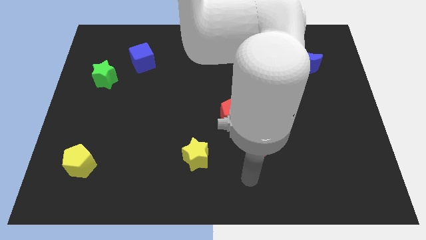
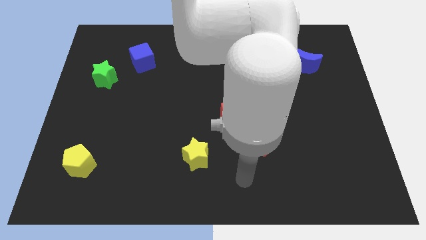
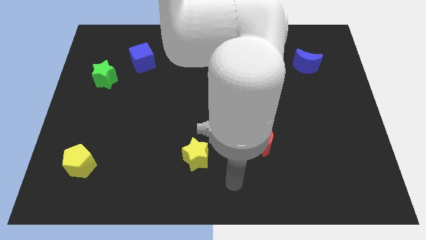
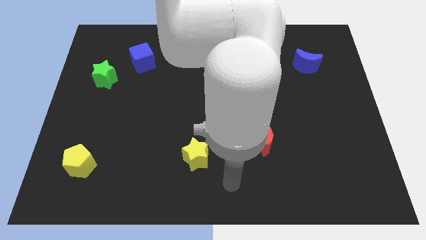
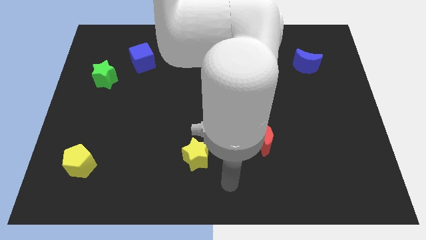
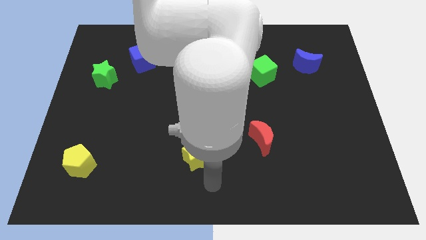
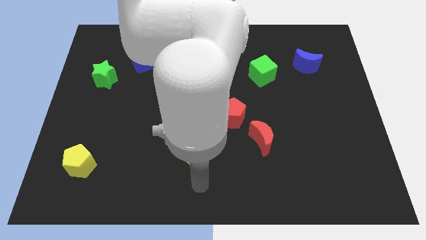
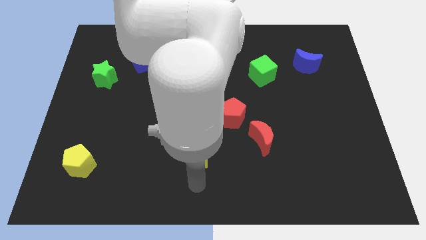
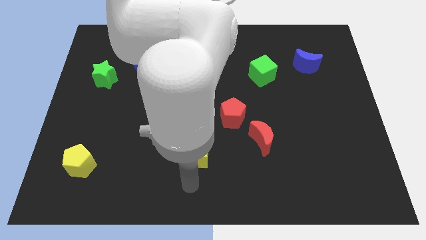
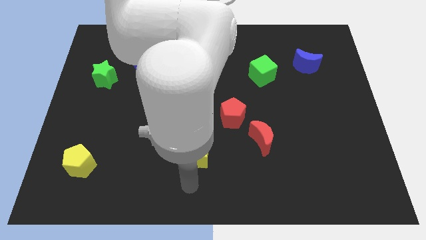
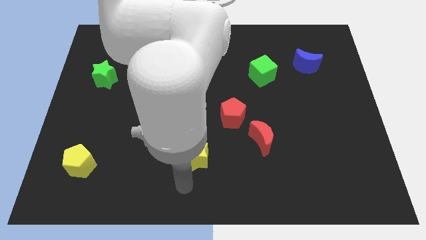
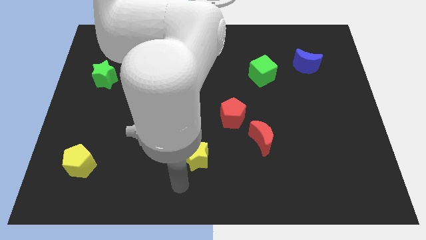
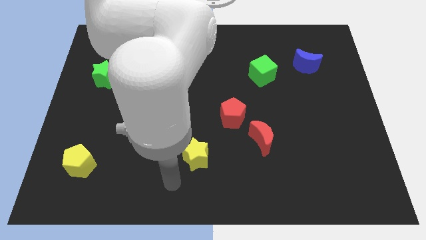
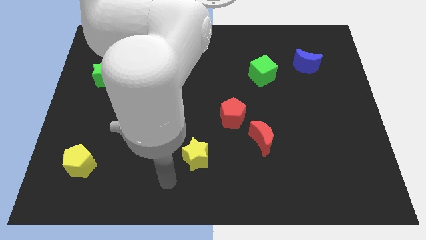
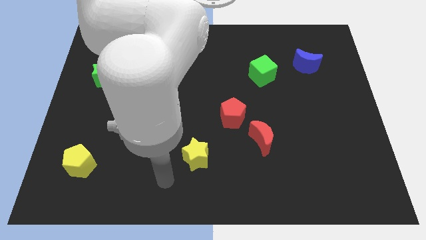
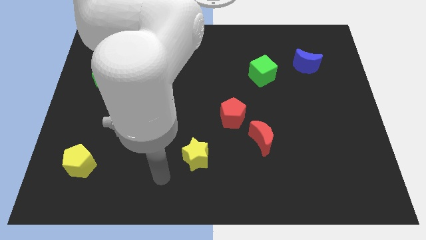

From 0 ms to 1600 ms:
place arm on the bottom left of yellow star

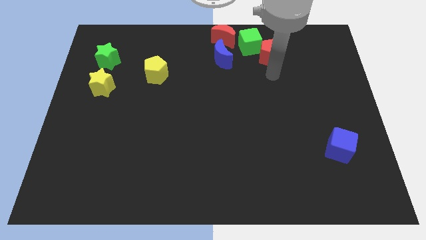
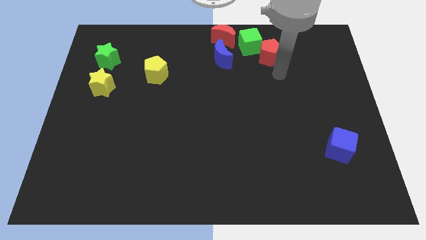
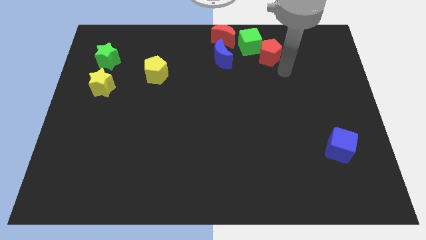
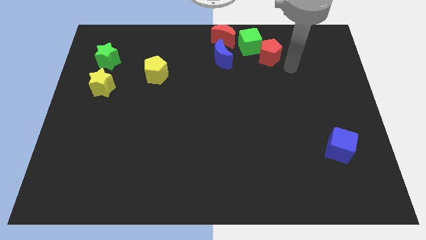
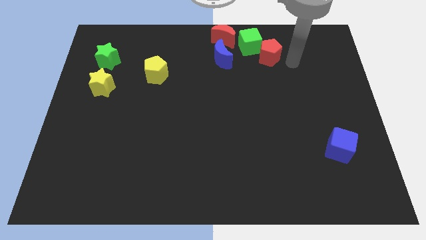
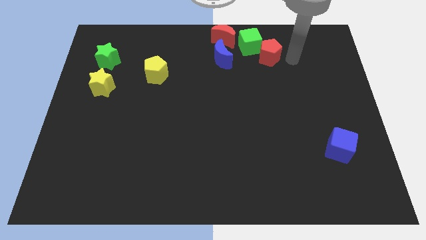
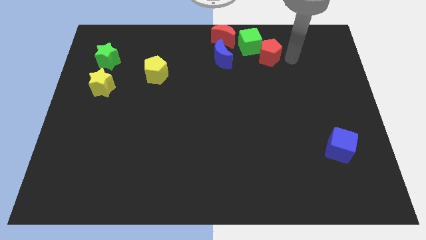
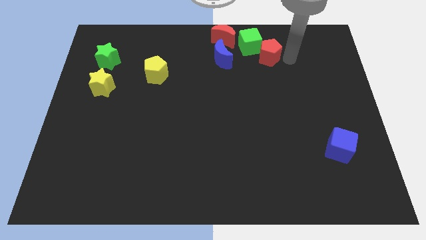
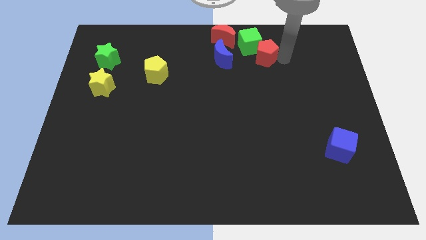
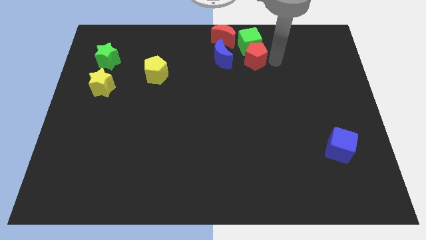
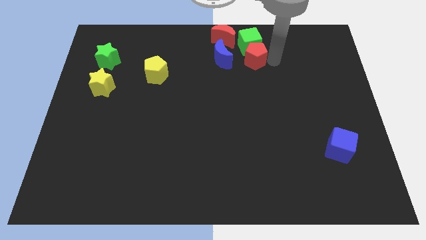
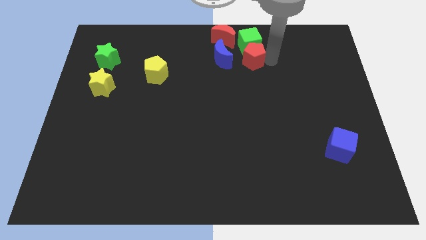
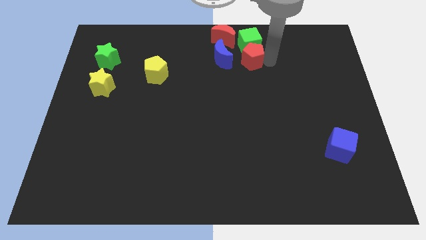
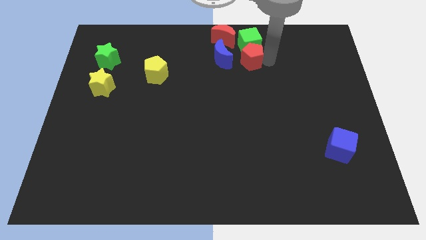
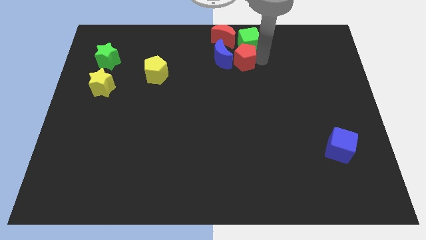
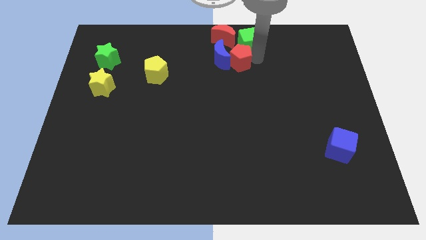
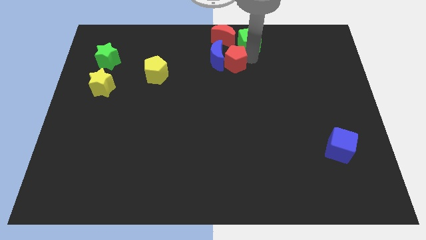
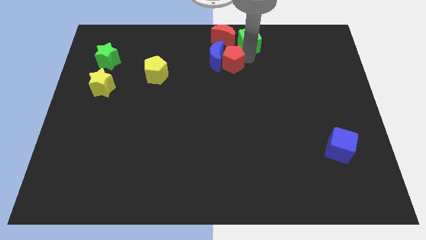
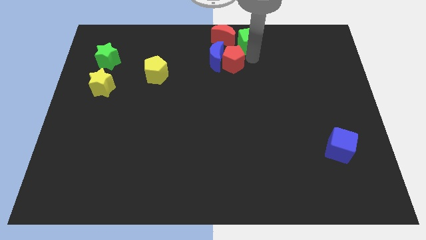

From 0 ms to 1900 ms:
move the red pentagon right to the blue crescent

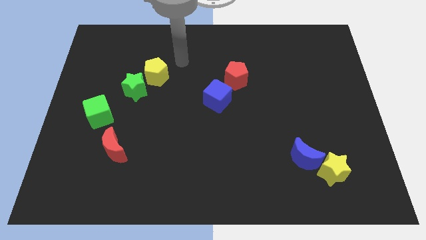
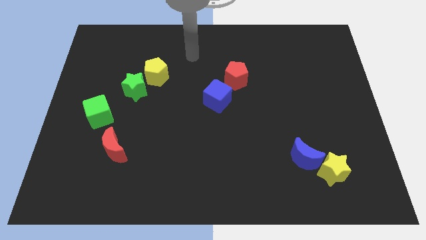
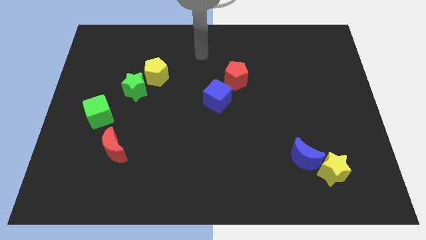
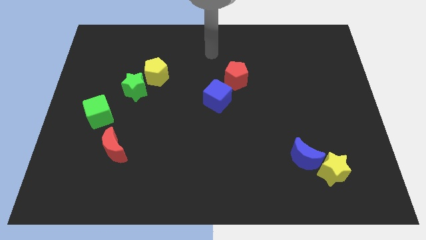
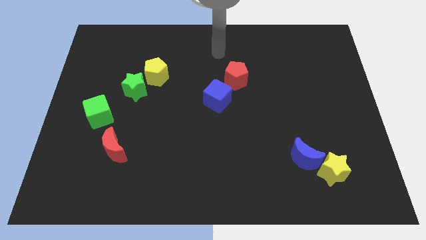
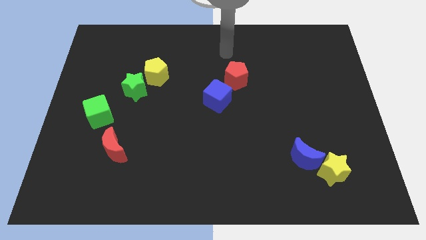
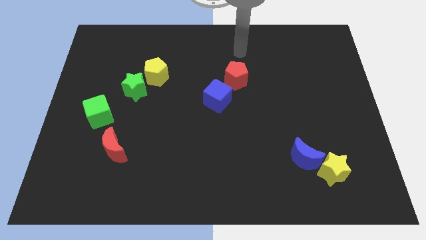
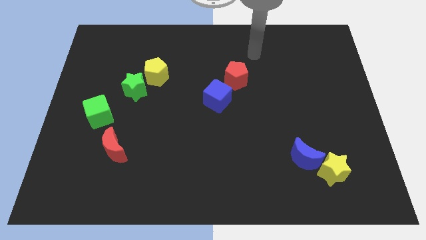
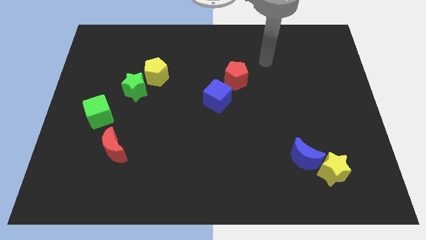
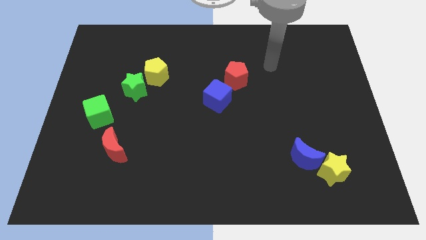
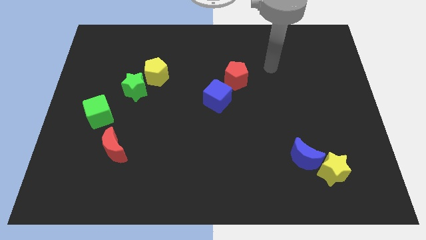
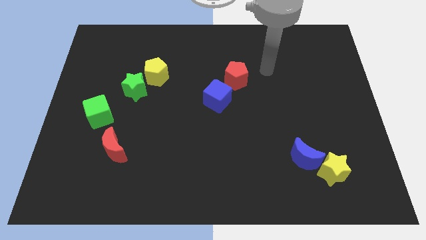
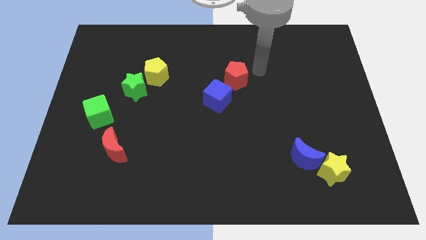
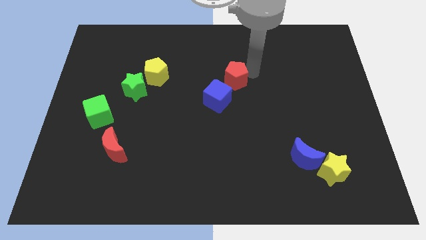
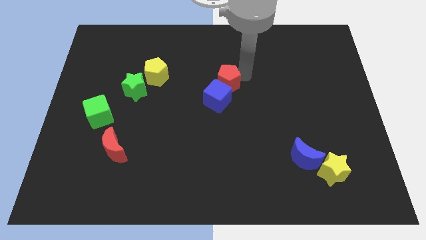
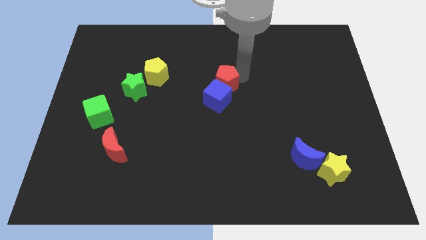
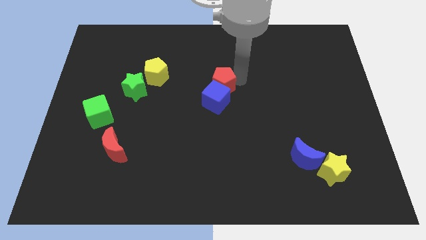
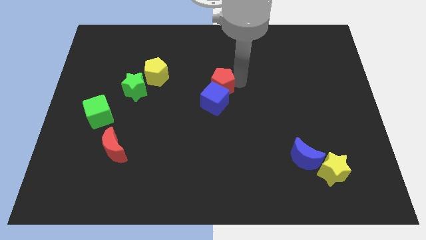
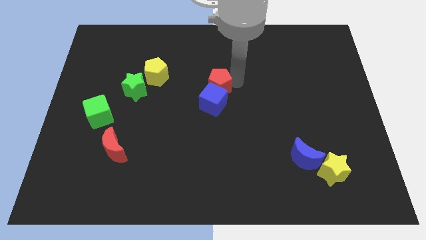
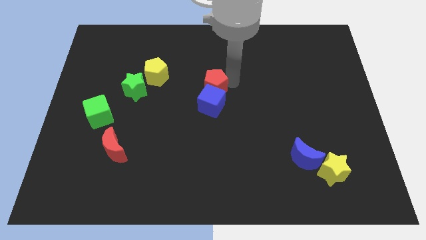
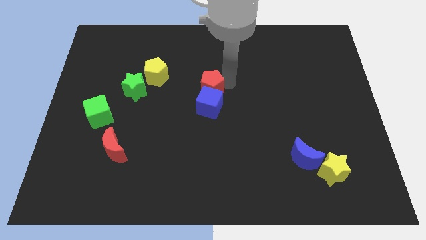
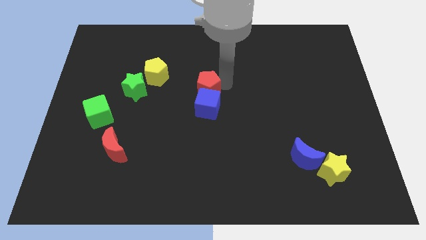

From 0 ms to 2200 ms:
place red pentagon to the right of green star

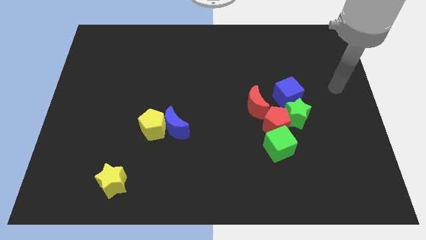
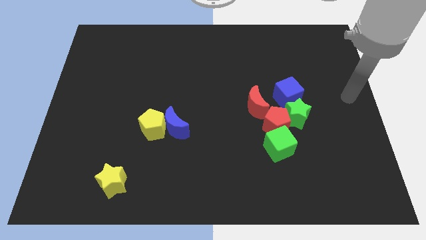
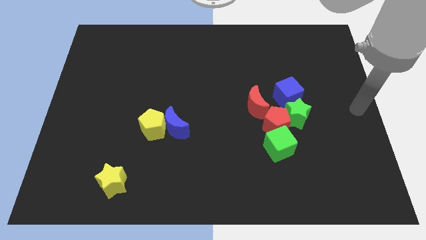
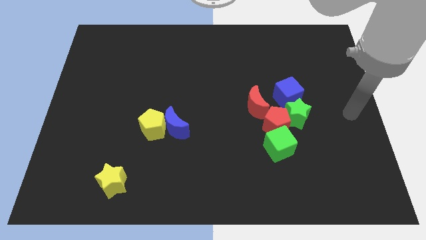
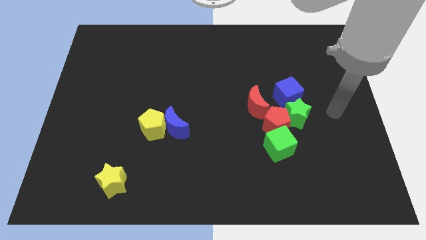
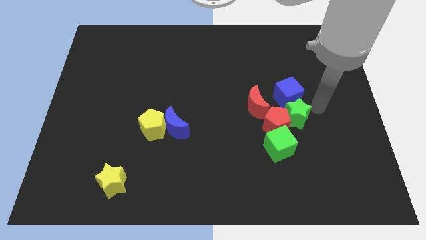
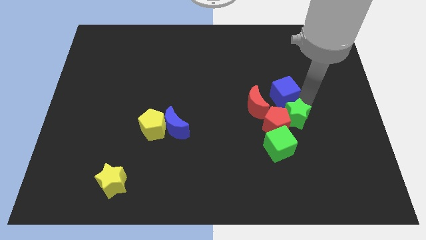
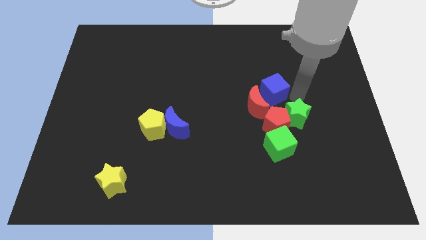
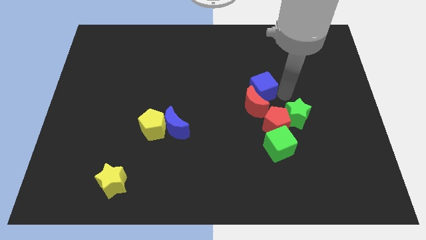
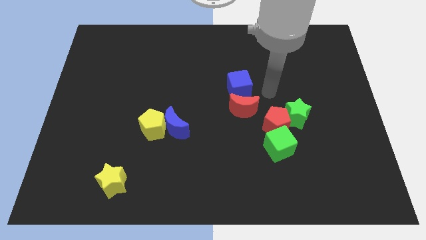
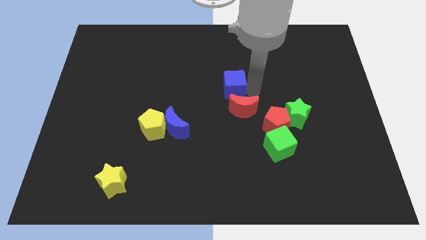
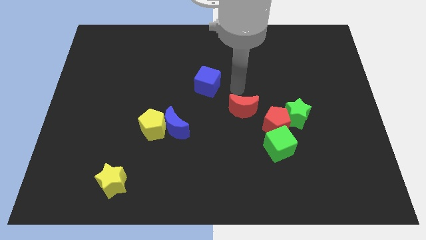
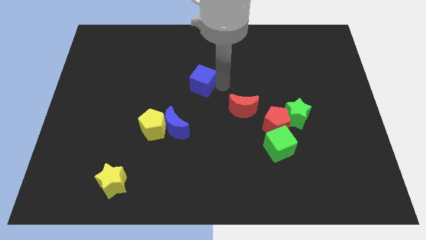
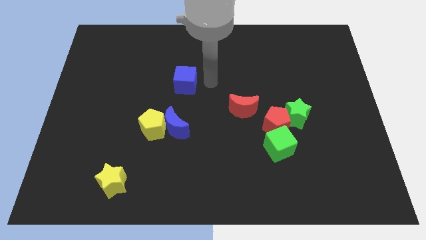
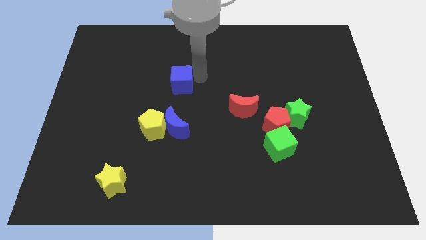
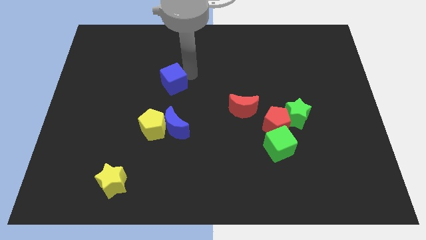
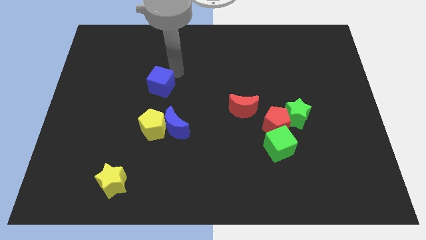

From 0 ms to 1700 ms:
move blue cube slightly to the left side of the board

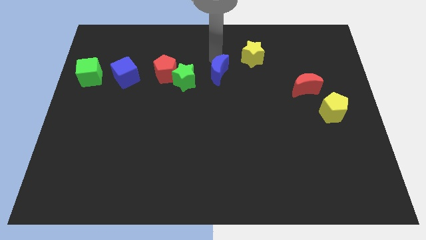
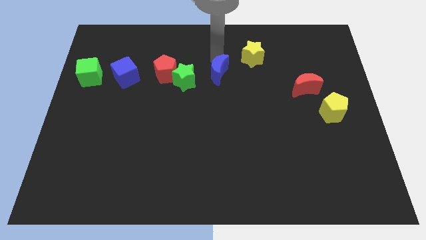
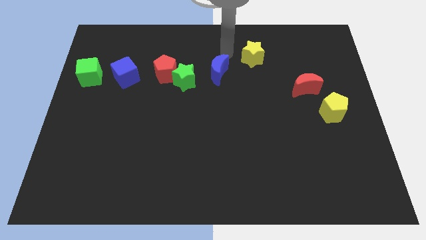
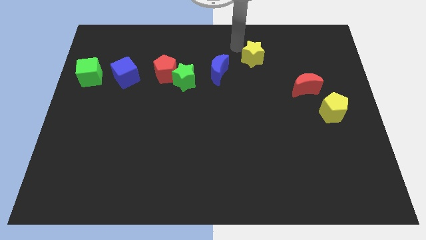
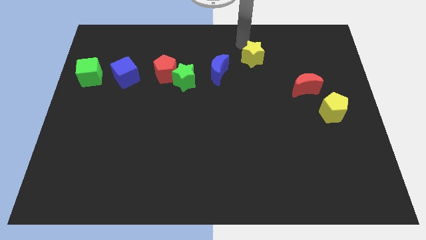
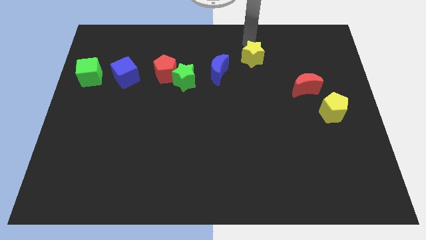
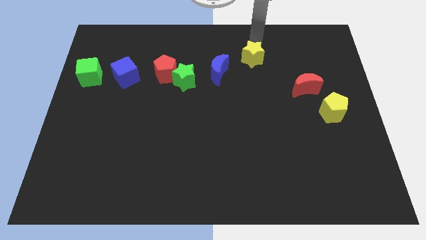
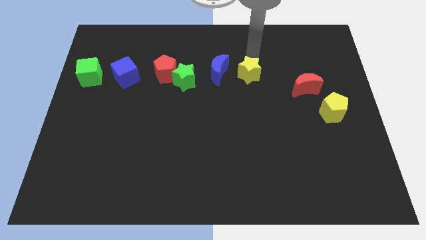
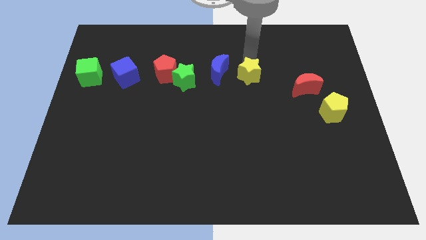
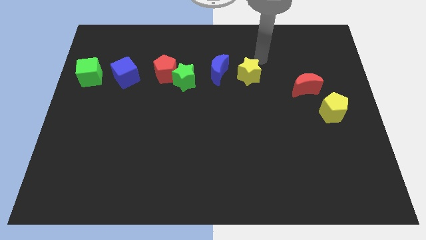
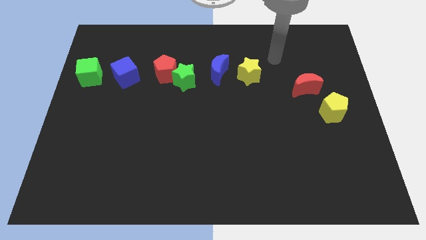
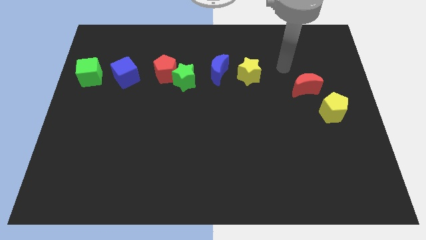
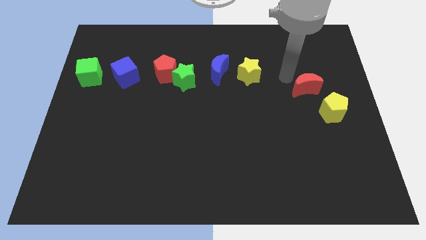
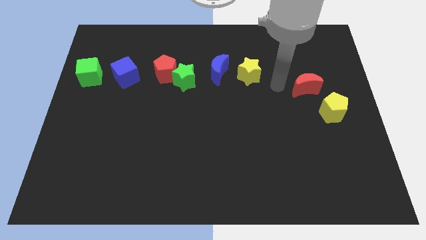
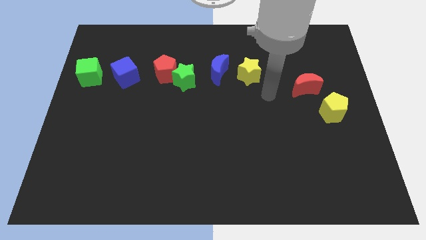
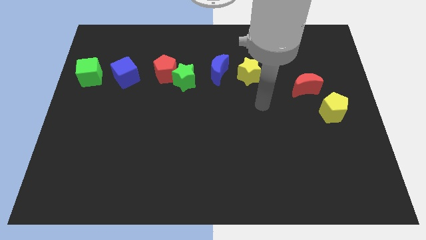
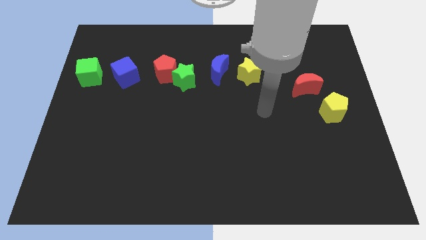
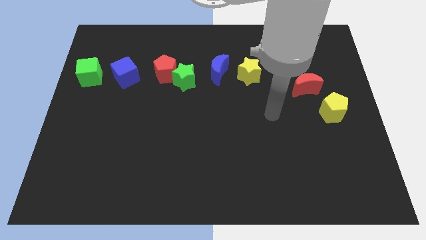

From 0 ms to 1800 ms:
adjust the yellow star to the right of the blue moon
